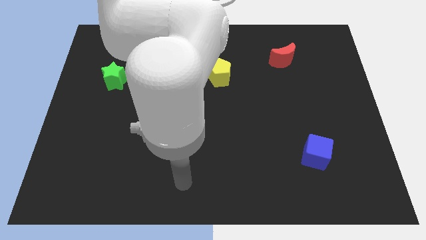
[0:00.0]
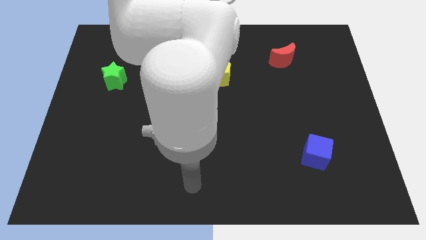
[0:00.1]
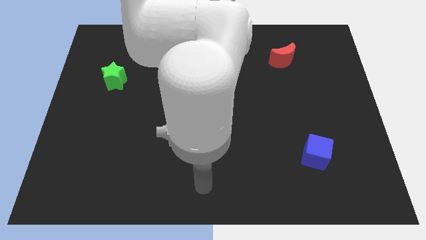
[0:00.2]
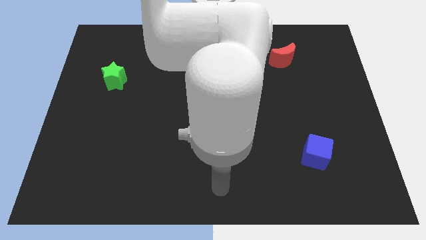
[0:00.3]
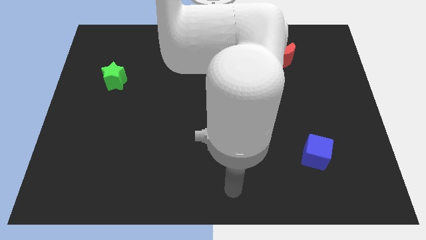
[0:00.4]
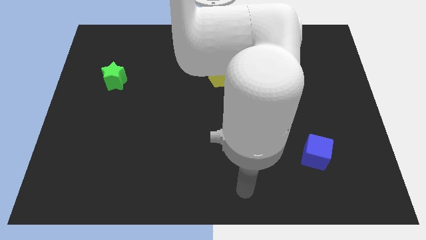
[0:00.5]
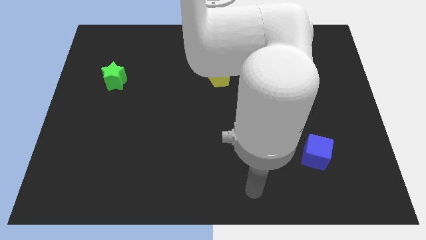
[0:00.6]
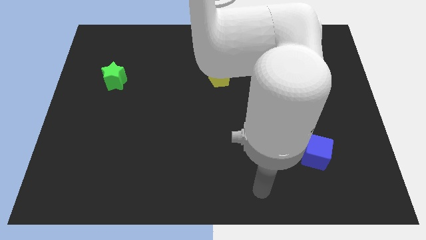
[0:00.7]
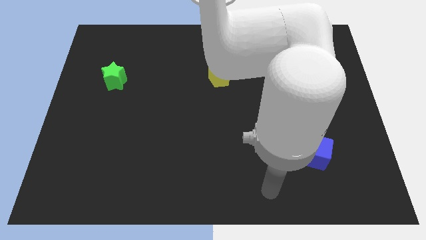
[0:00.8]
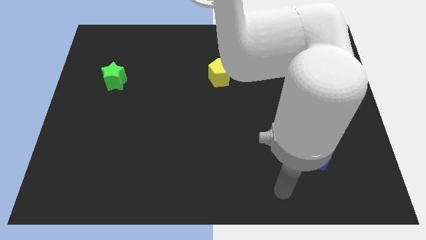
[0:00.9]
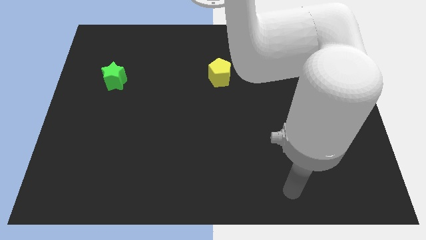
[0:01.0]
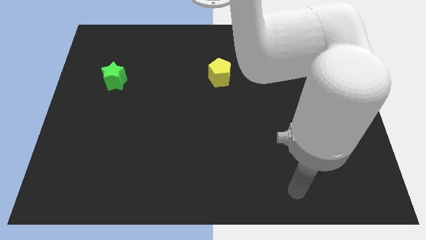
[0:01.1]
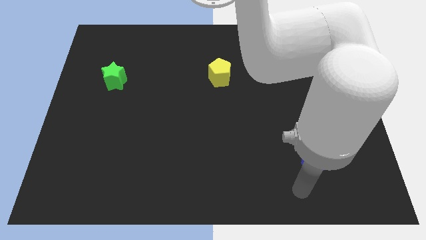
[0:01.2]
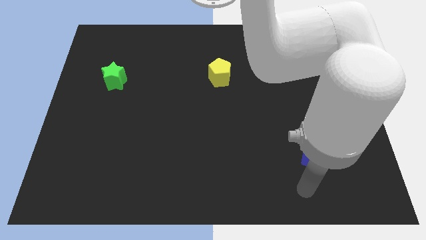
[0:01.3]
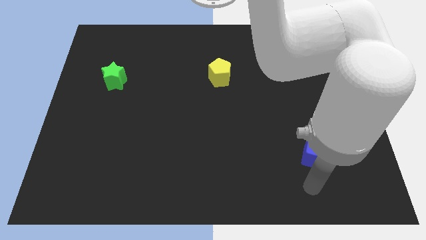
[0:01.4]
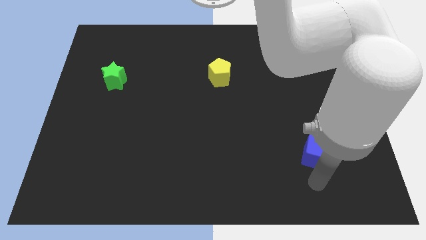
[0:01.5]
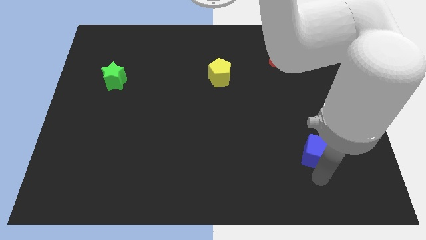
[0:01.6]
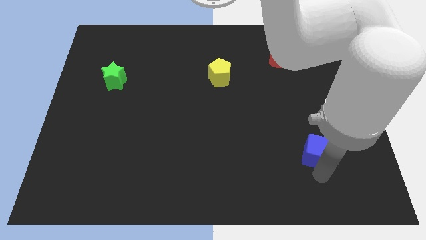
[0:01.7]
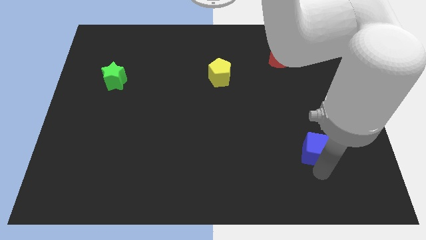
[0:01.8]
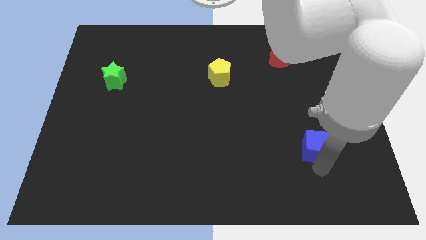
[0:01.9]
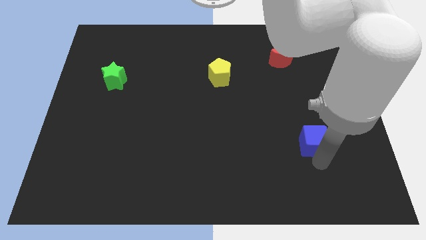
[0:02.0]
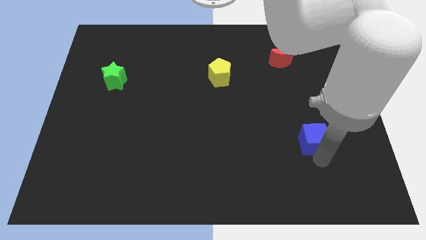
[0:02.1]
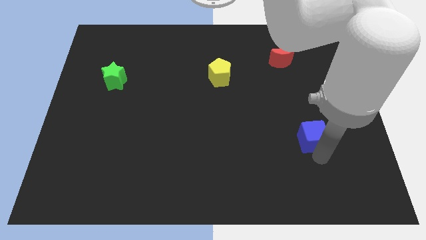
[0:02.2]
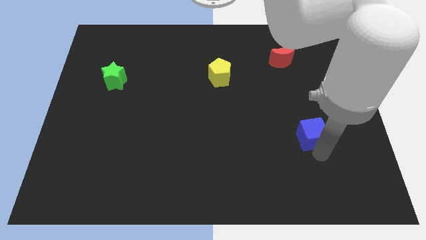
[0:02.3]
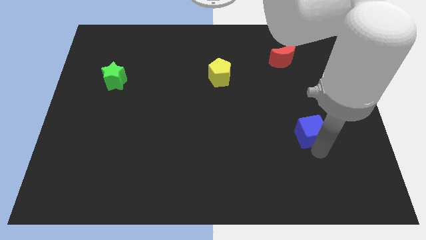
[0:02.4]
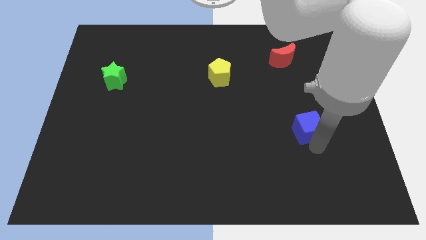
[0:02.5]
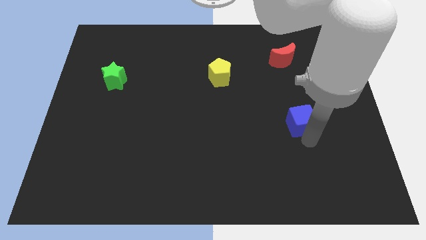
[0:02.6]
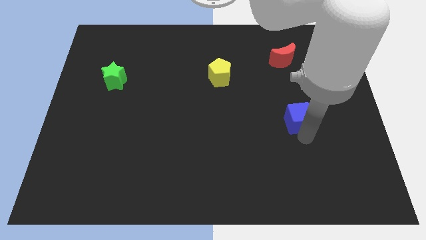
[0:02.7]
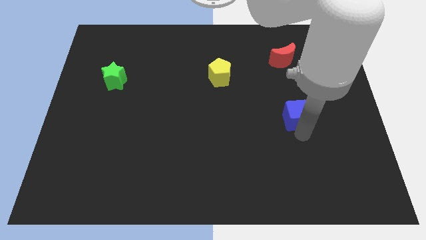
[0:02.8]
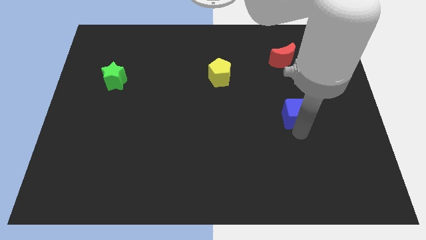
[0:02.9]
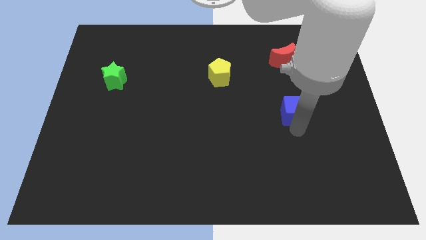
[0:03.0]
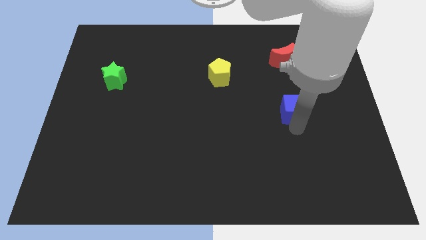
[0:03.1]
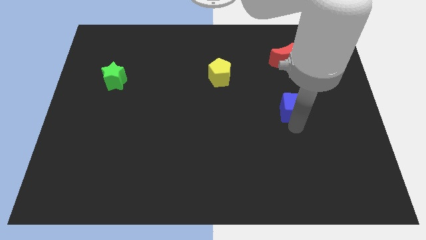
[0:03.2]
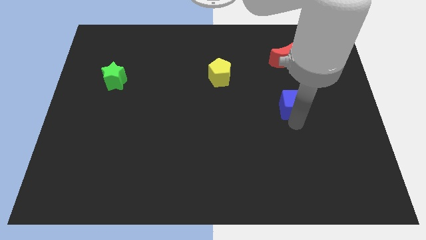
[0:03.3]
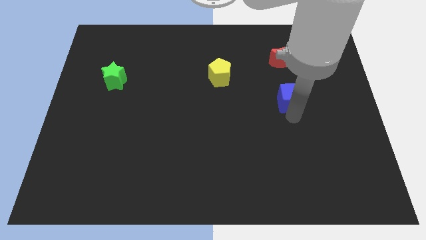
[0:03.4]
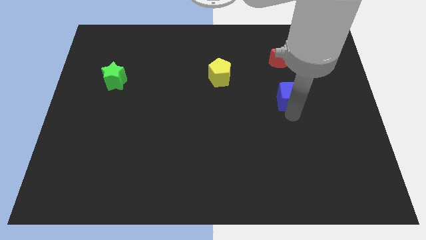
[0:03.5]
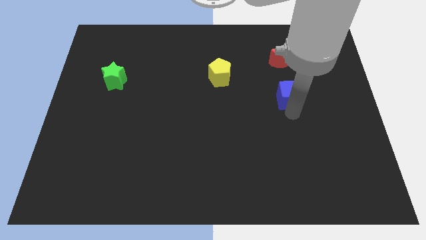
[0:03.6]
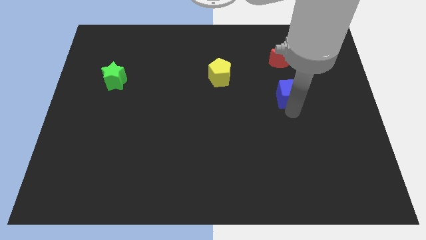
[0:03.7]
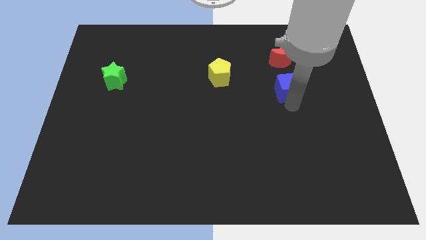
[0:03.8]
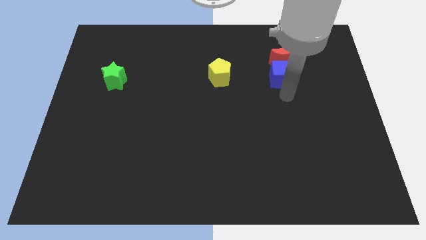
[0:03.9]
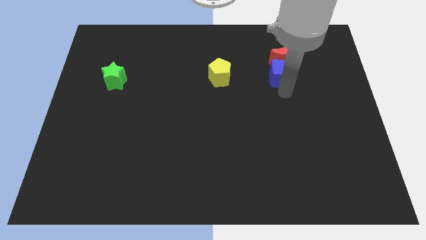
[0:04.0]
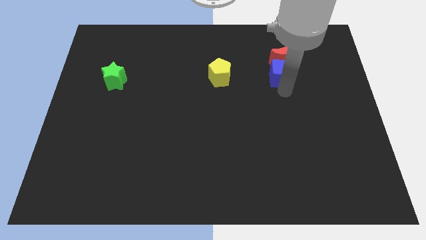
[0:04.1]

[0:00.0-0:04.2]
push the cube towards the red block

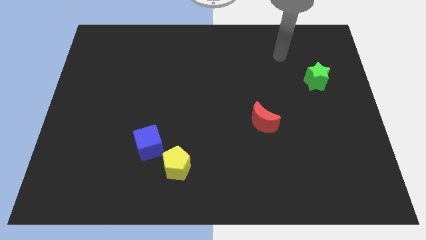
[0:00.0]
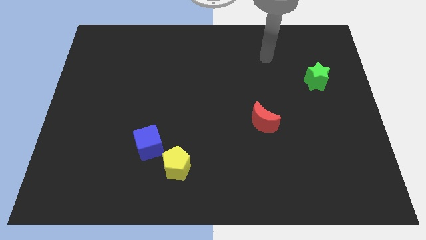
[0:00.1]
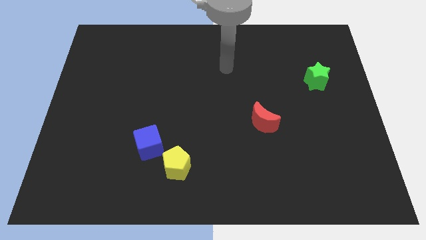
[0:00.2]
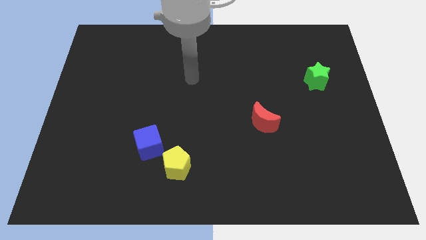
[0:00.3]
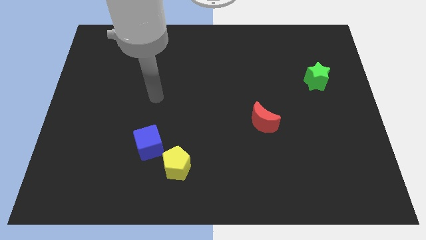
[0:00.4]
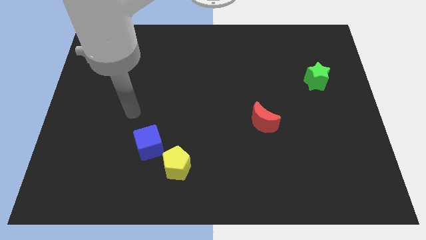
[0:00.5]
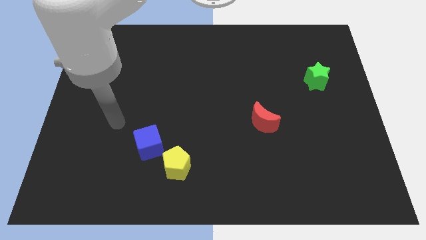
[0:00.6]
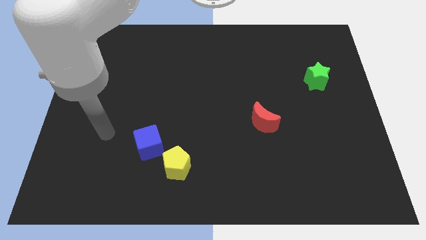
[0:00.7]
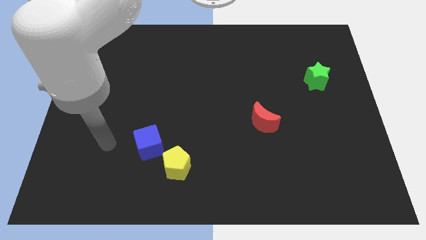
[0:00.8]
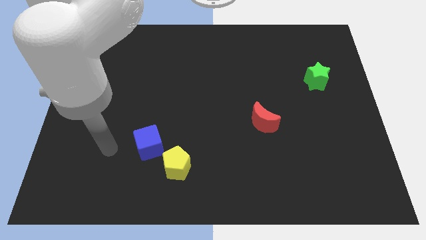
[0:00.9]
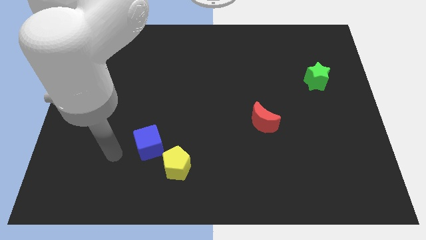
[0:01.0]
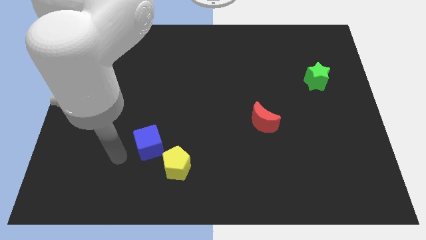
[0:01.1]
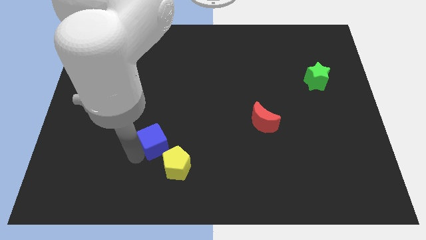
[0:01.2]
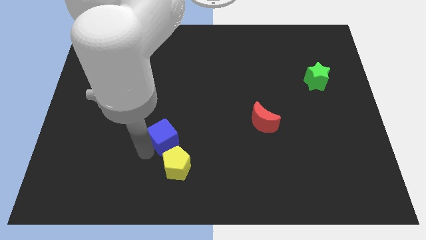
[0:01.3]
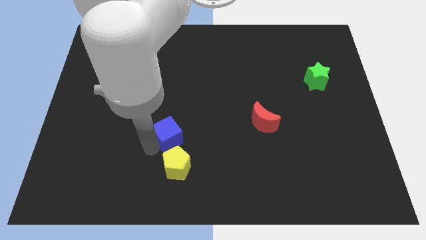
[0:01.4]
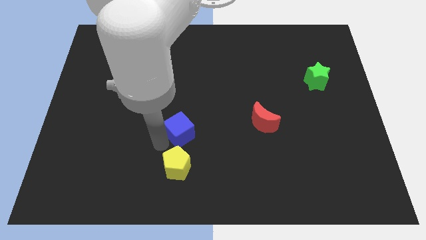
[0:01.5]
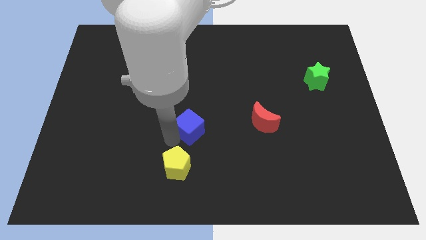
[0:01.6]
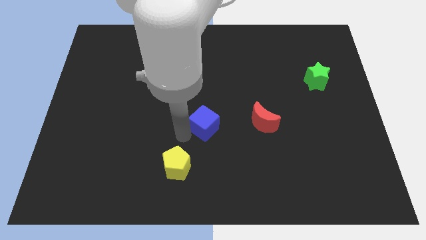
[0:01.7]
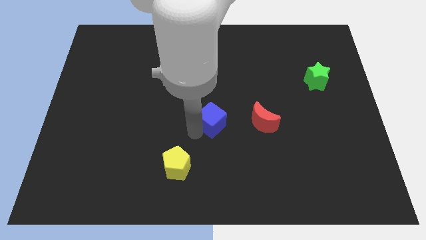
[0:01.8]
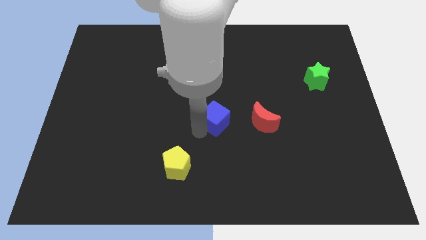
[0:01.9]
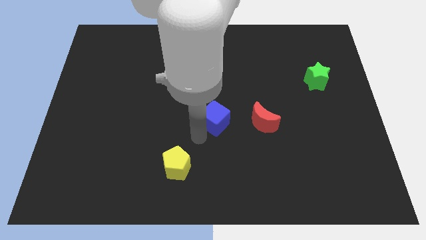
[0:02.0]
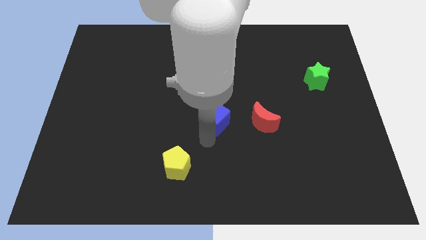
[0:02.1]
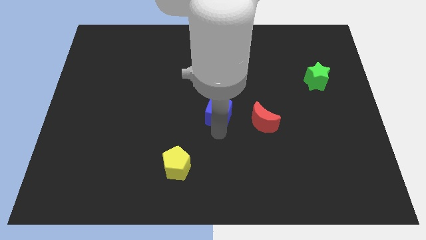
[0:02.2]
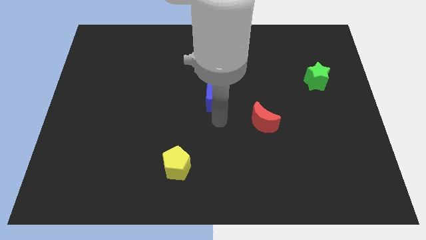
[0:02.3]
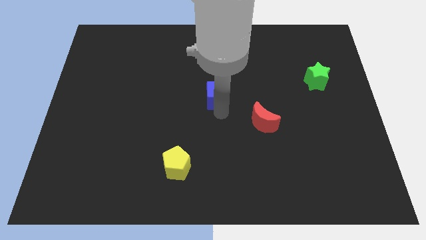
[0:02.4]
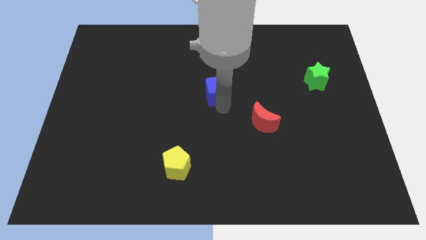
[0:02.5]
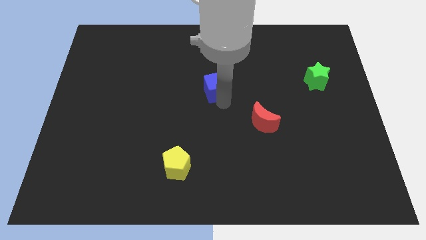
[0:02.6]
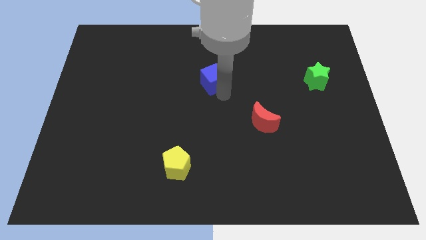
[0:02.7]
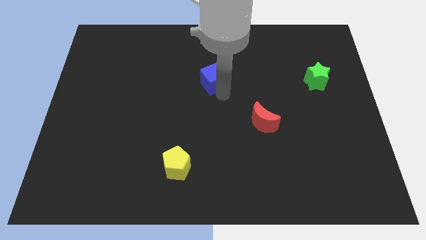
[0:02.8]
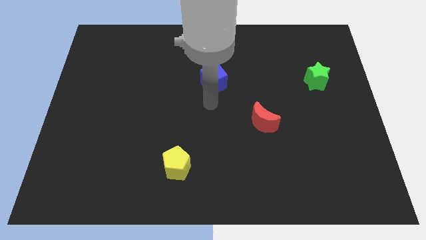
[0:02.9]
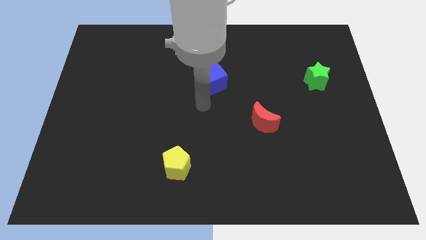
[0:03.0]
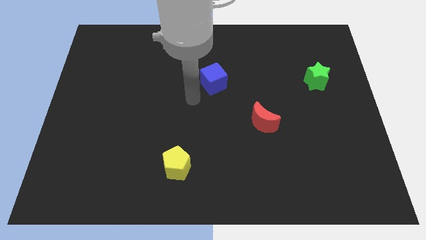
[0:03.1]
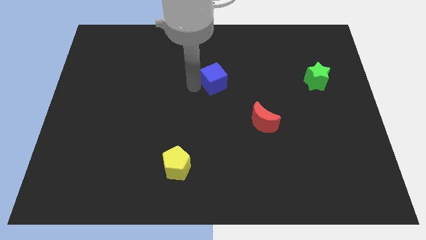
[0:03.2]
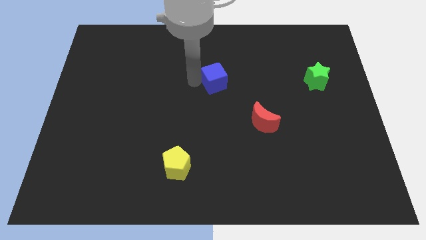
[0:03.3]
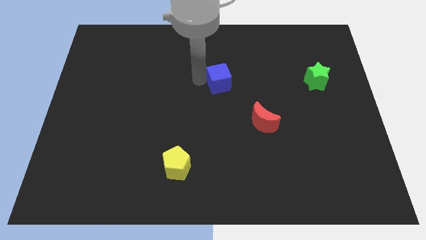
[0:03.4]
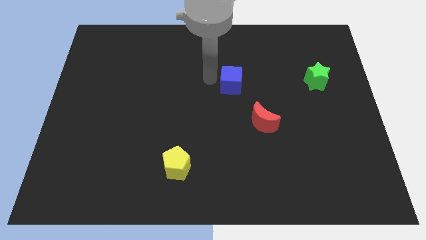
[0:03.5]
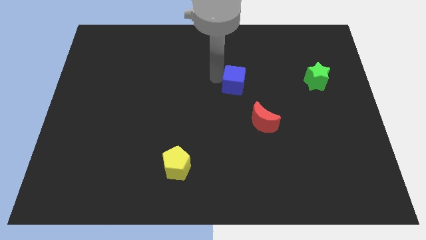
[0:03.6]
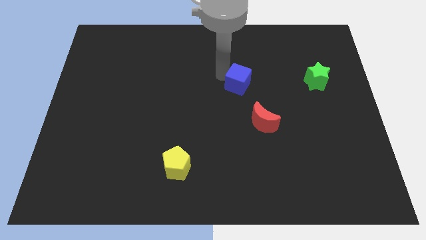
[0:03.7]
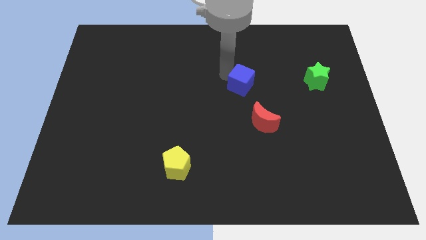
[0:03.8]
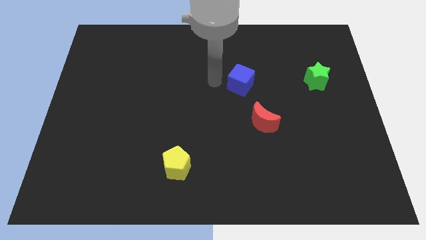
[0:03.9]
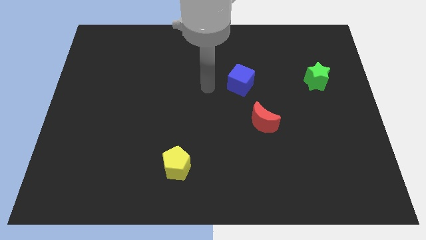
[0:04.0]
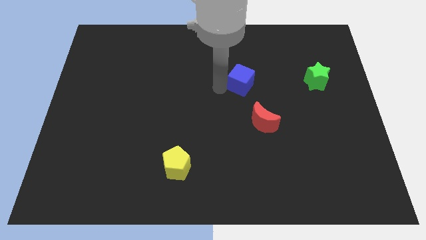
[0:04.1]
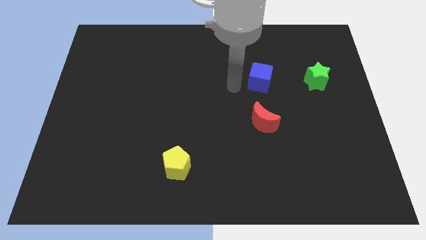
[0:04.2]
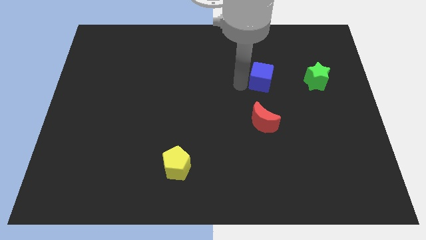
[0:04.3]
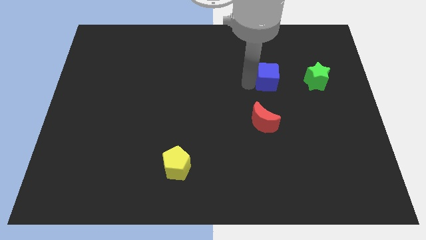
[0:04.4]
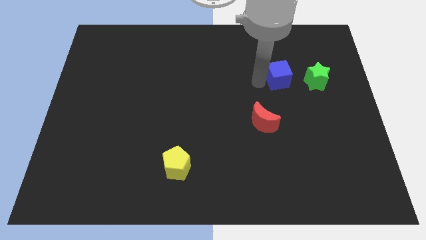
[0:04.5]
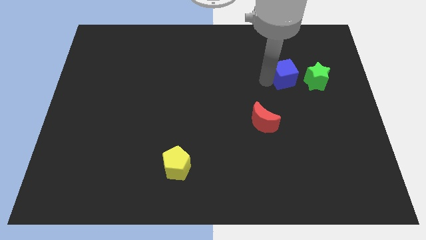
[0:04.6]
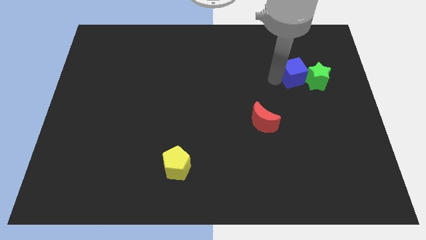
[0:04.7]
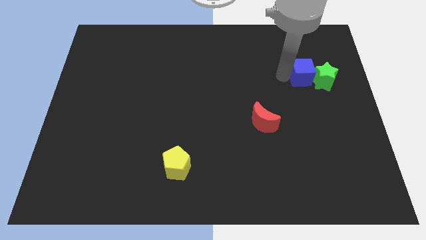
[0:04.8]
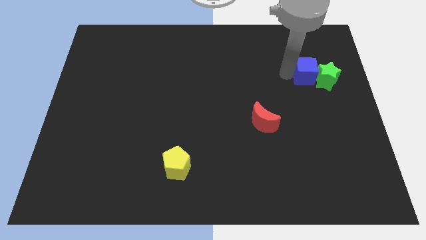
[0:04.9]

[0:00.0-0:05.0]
put the cube next to the green star
